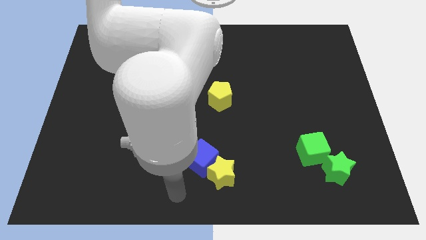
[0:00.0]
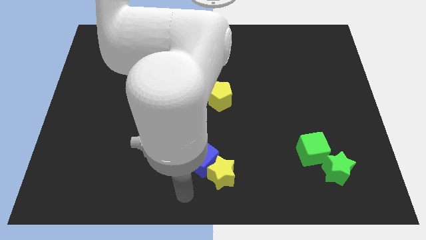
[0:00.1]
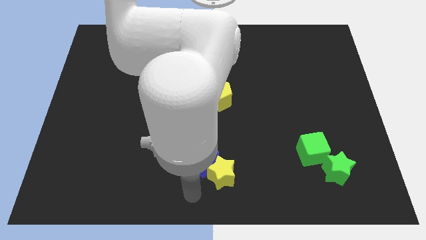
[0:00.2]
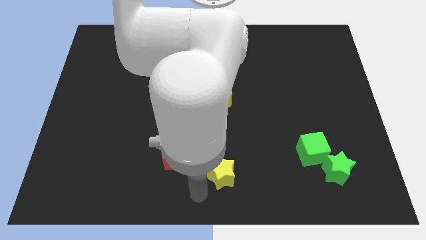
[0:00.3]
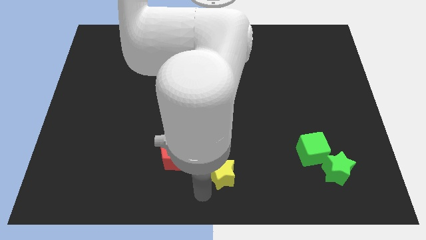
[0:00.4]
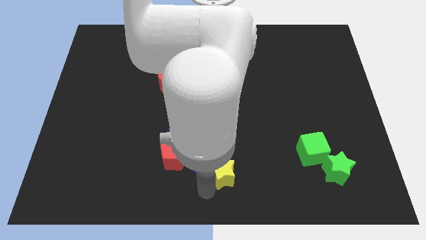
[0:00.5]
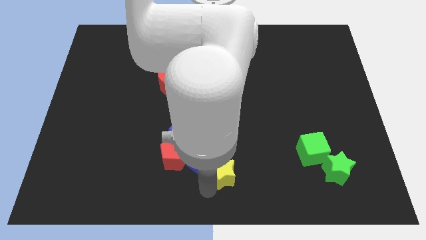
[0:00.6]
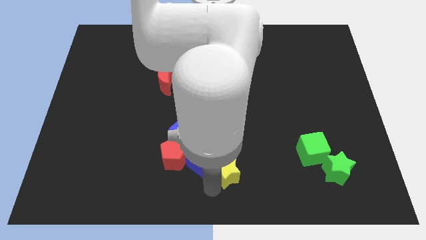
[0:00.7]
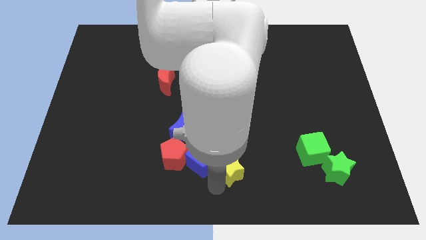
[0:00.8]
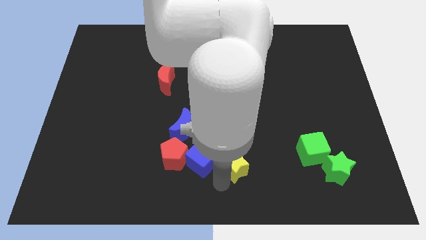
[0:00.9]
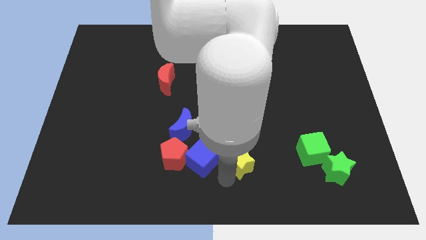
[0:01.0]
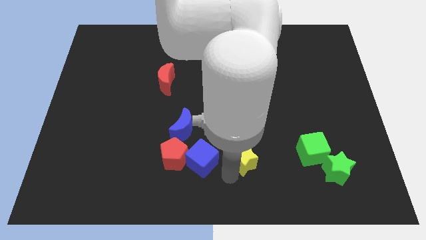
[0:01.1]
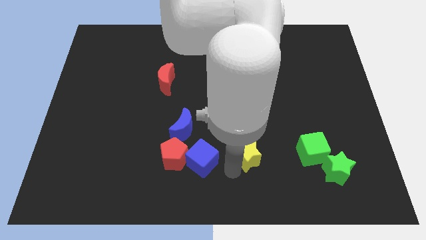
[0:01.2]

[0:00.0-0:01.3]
push the yellow star to the right of the blue cube

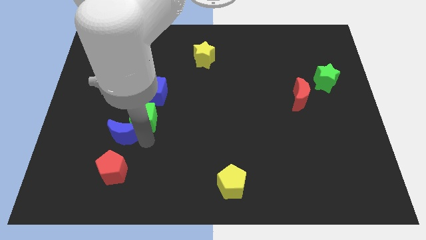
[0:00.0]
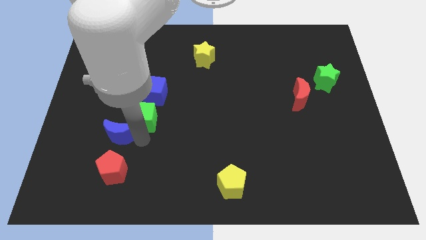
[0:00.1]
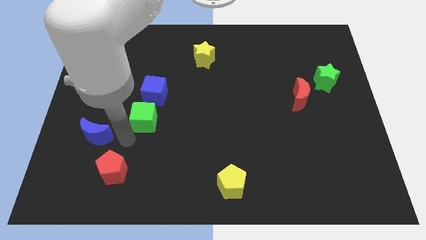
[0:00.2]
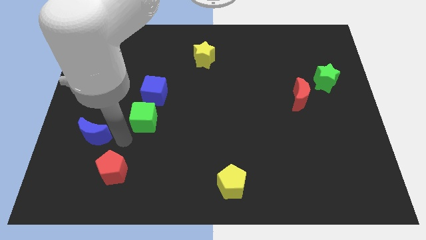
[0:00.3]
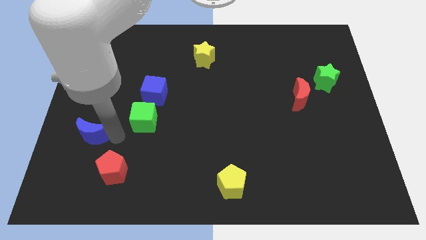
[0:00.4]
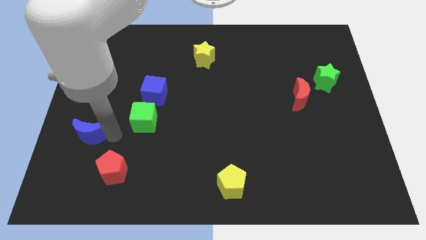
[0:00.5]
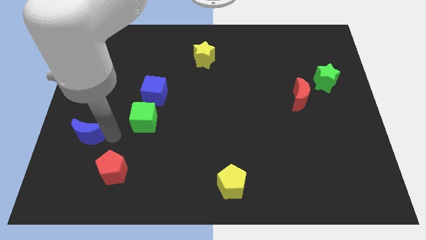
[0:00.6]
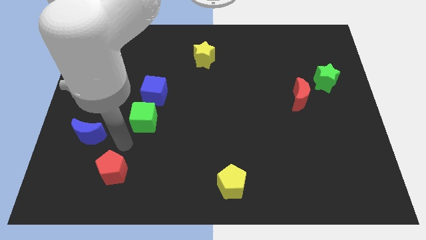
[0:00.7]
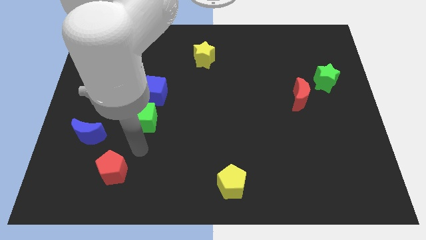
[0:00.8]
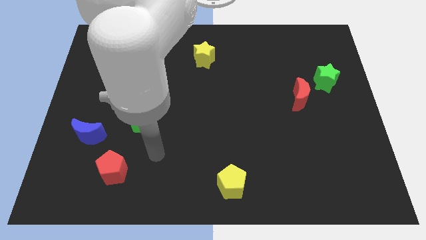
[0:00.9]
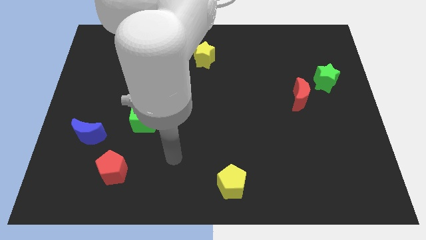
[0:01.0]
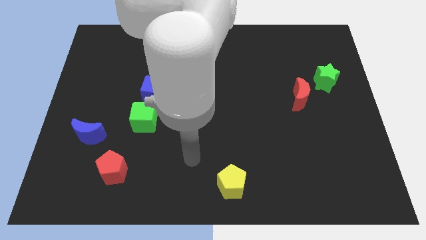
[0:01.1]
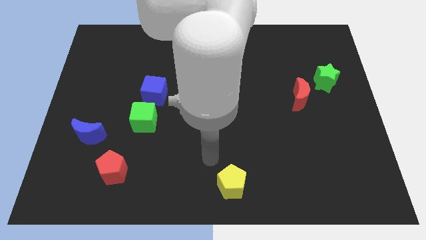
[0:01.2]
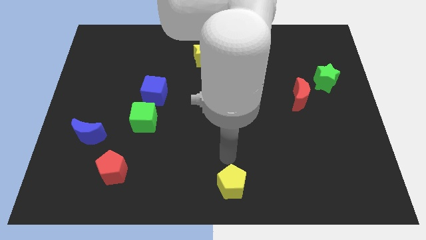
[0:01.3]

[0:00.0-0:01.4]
slide the blue crescent slightly to the left

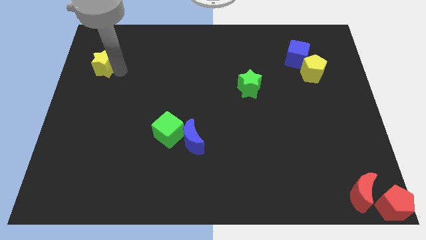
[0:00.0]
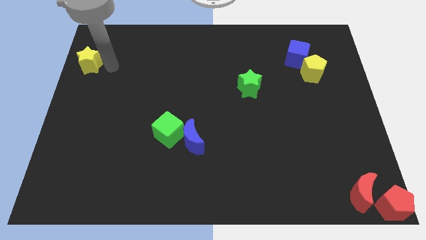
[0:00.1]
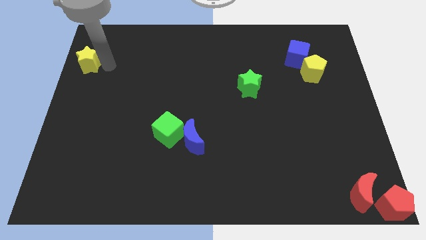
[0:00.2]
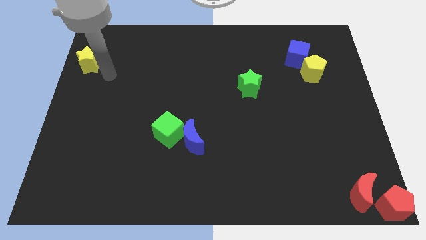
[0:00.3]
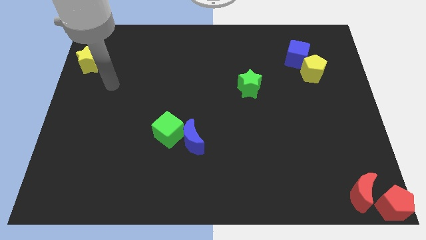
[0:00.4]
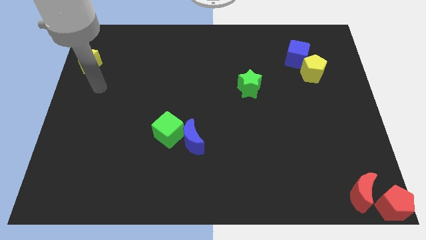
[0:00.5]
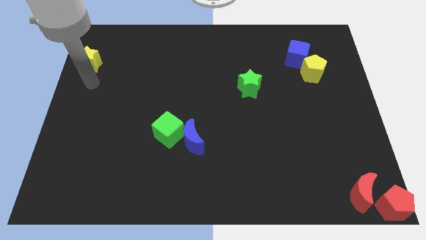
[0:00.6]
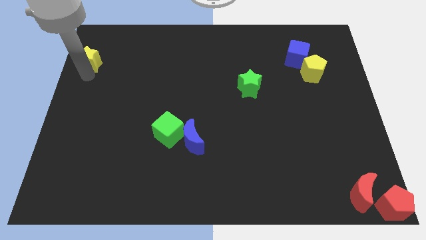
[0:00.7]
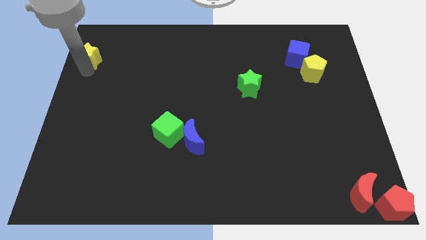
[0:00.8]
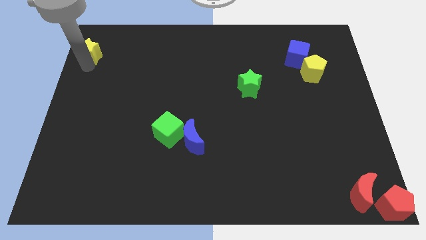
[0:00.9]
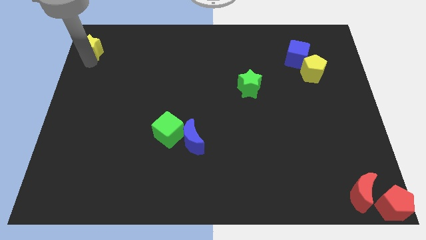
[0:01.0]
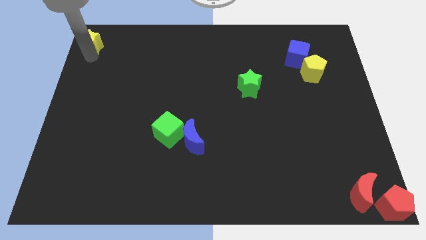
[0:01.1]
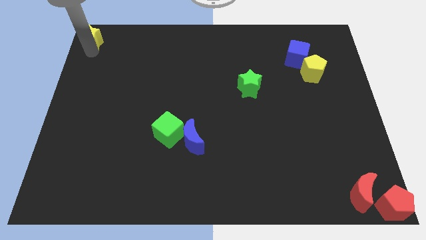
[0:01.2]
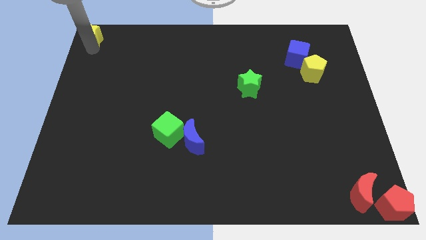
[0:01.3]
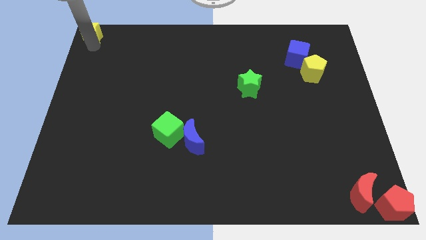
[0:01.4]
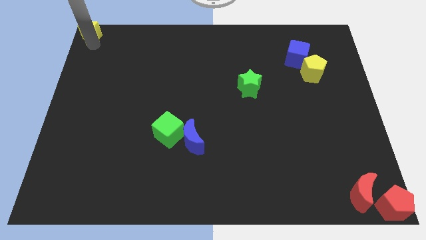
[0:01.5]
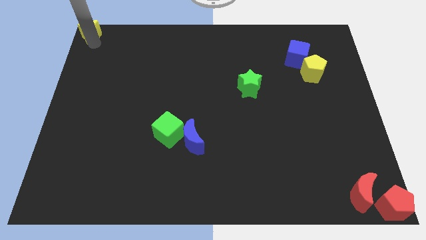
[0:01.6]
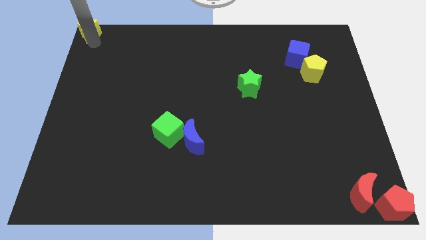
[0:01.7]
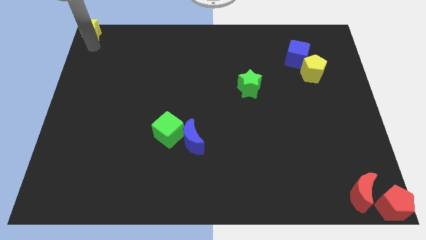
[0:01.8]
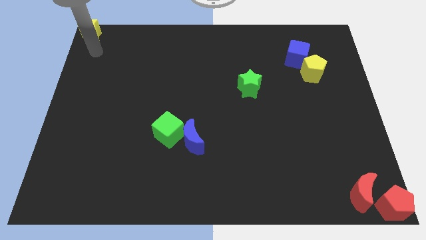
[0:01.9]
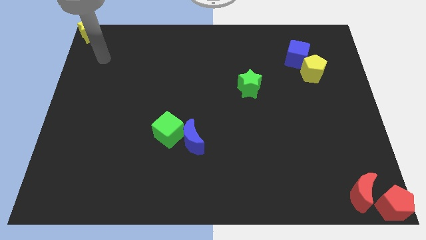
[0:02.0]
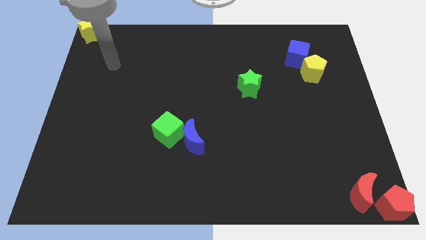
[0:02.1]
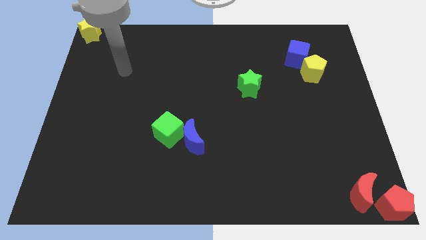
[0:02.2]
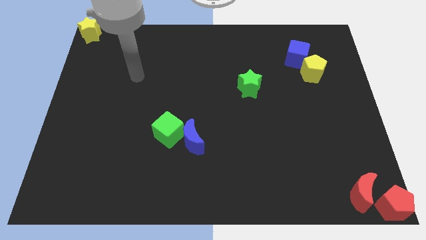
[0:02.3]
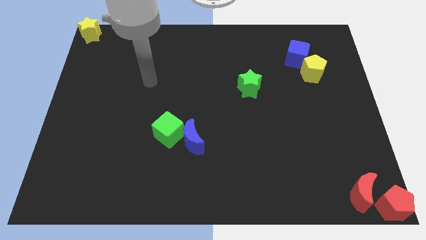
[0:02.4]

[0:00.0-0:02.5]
place the yellow star at the top left corner of the board and move away

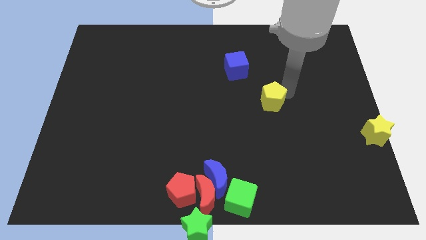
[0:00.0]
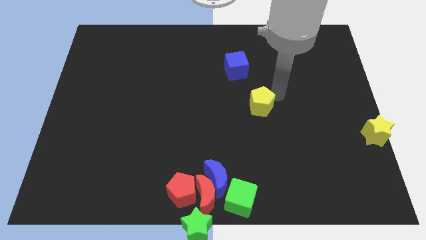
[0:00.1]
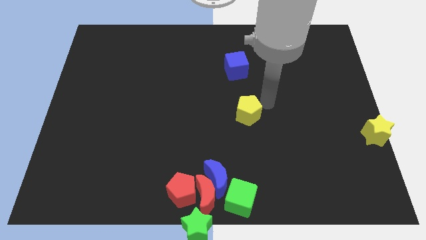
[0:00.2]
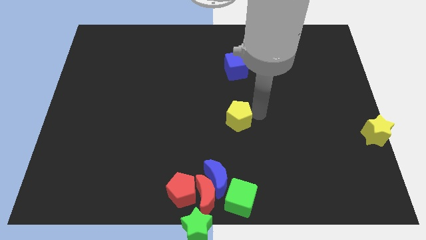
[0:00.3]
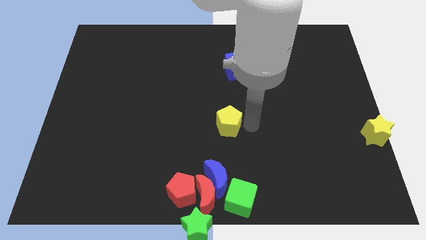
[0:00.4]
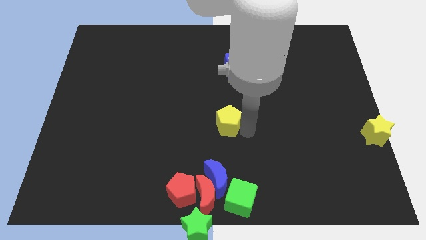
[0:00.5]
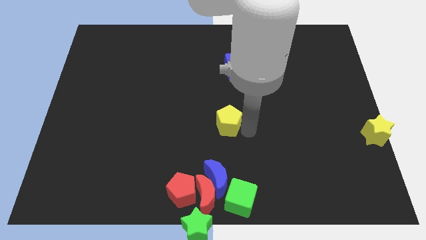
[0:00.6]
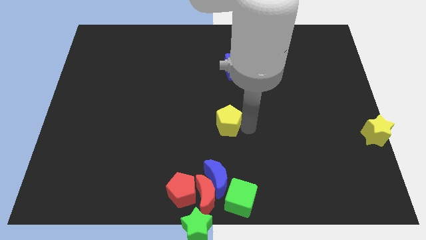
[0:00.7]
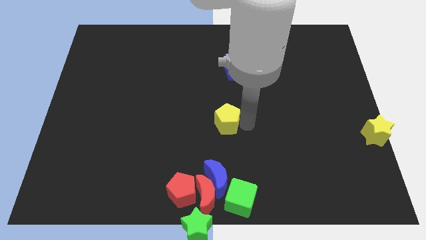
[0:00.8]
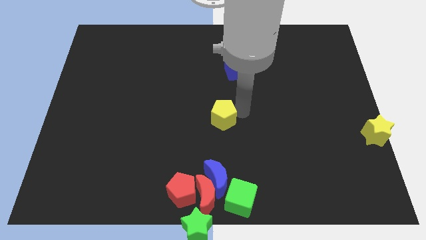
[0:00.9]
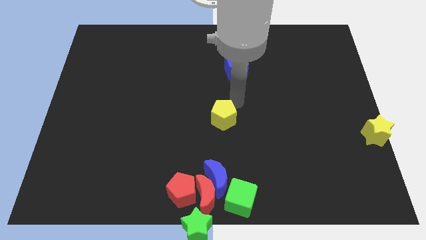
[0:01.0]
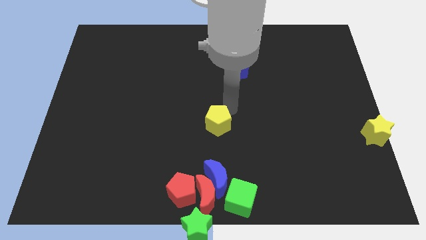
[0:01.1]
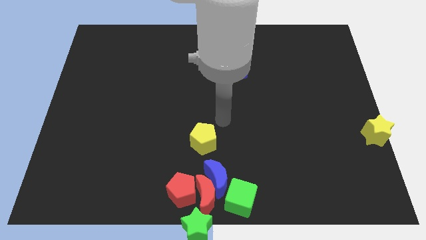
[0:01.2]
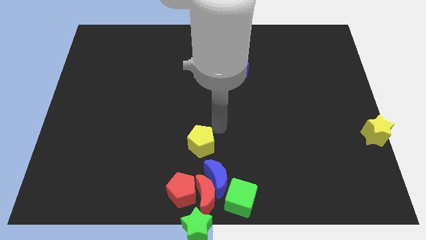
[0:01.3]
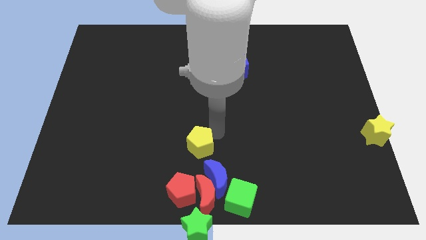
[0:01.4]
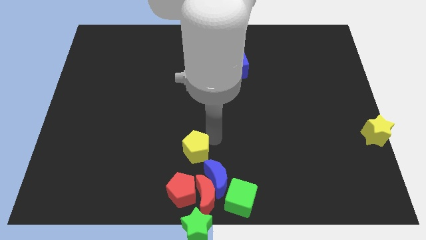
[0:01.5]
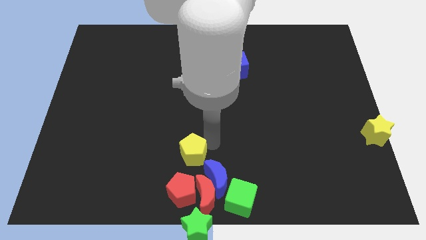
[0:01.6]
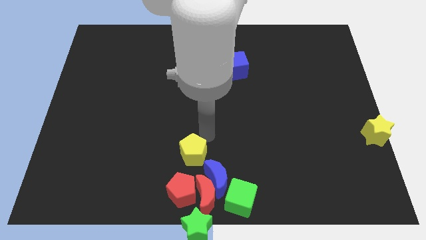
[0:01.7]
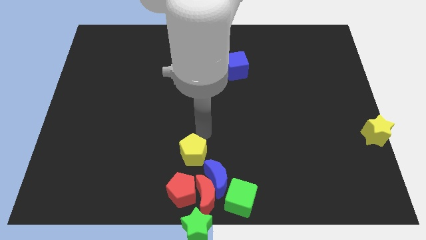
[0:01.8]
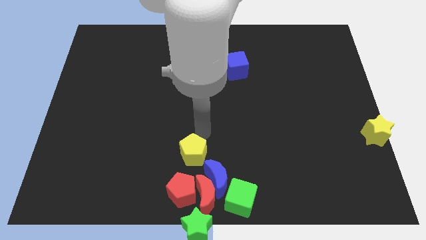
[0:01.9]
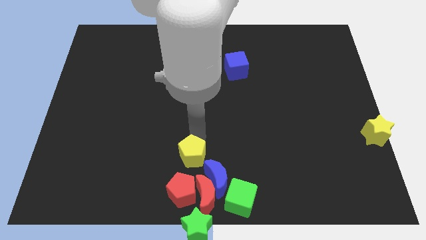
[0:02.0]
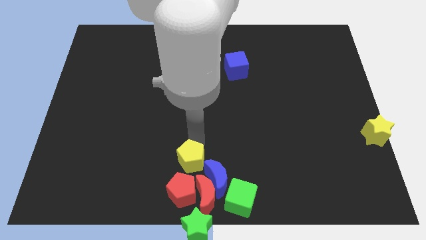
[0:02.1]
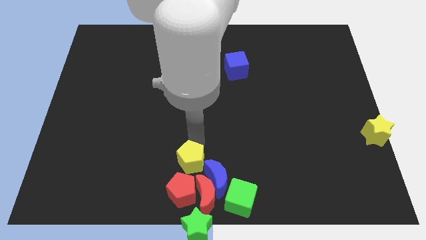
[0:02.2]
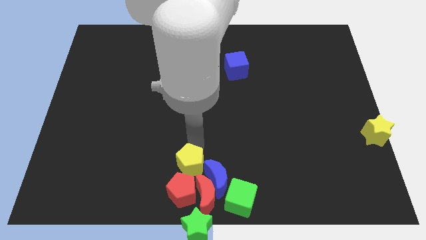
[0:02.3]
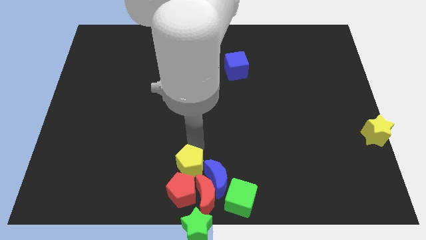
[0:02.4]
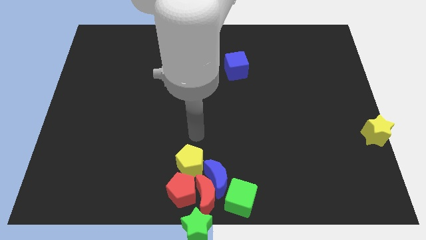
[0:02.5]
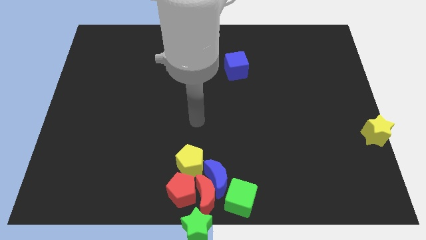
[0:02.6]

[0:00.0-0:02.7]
move the yellow pentagon top left side of the blue crescent

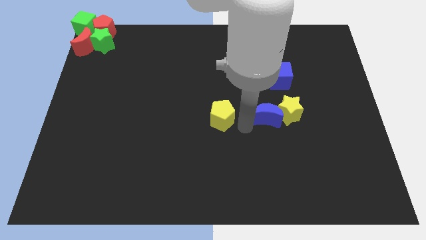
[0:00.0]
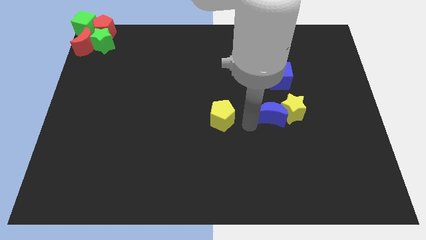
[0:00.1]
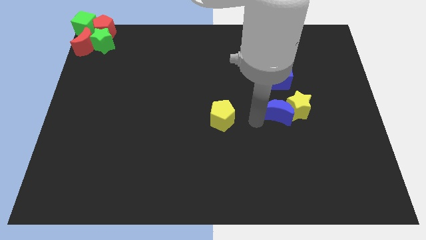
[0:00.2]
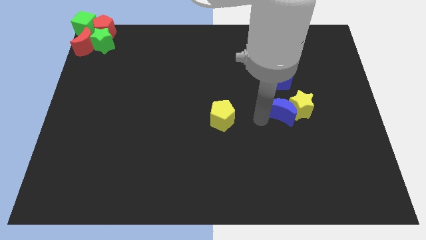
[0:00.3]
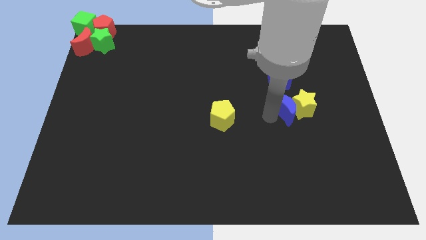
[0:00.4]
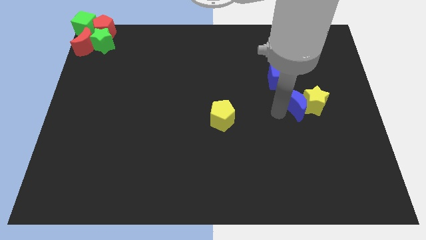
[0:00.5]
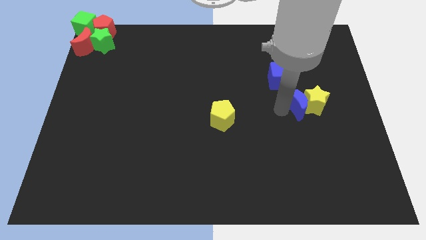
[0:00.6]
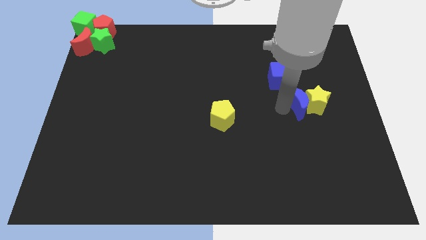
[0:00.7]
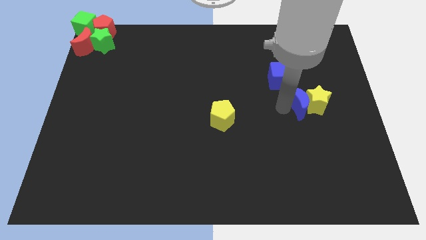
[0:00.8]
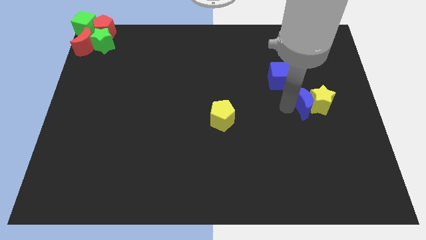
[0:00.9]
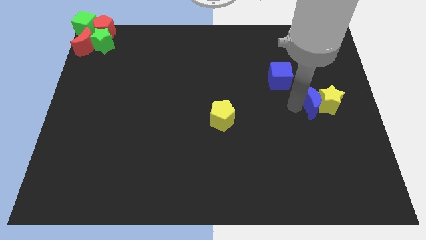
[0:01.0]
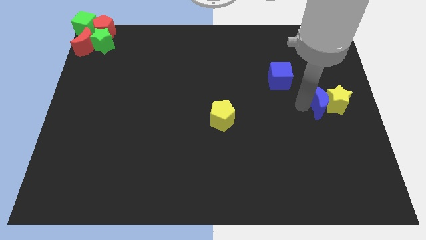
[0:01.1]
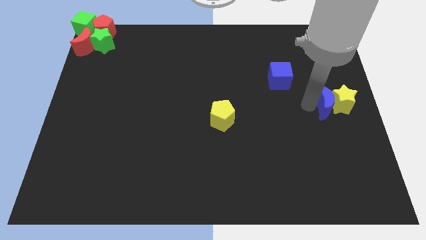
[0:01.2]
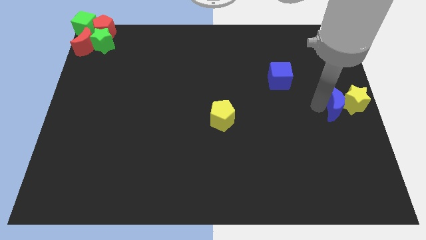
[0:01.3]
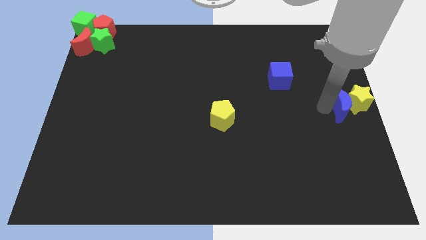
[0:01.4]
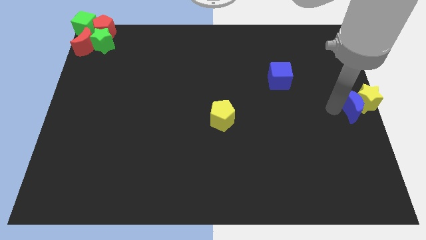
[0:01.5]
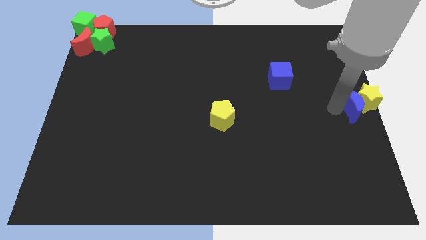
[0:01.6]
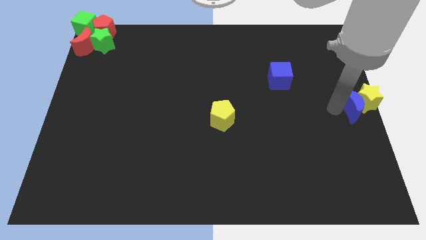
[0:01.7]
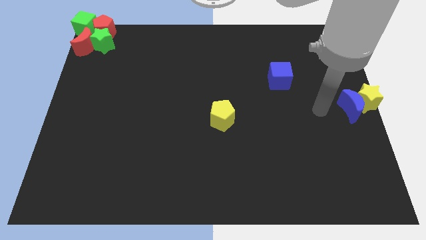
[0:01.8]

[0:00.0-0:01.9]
move the yellow star and blue moon towards right center
